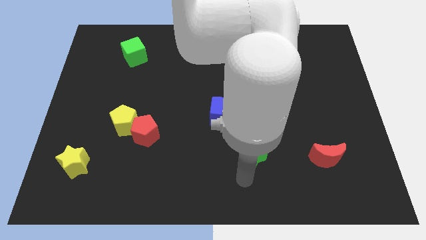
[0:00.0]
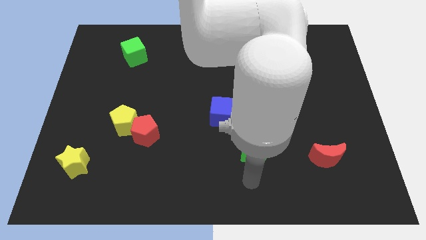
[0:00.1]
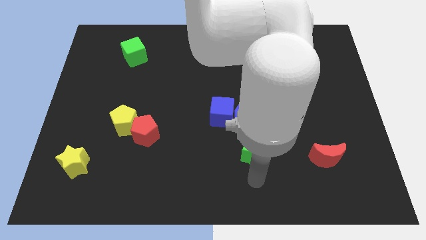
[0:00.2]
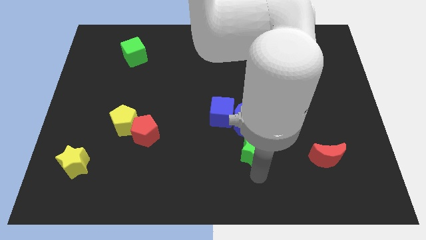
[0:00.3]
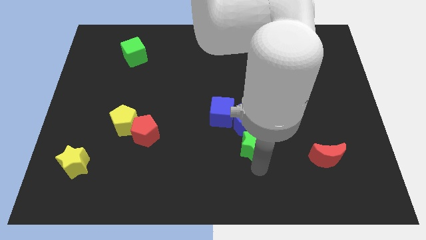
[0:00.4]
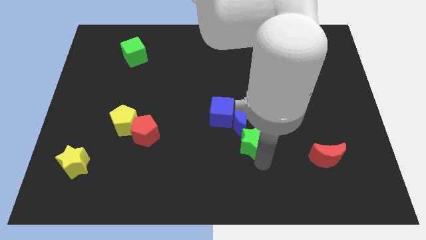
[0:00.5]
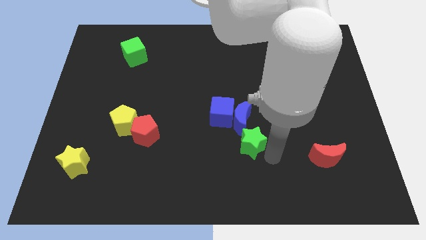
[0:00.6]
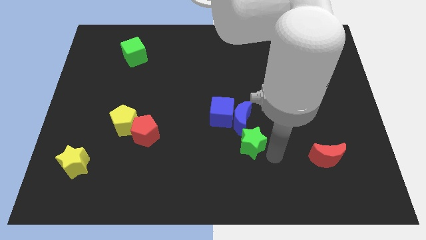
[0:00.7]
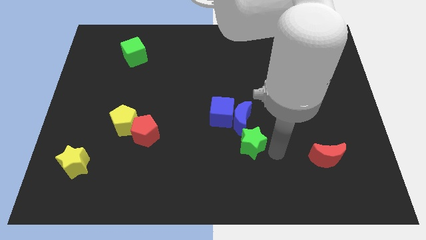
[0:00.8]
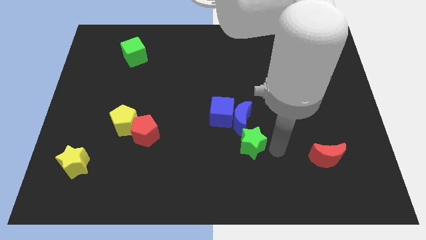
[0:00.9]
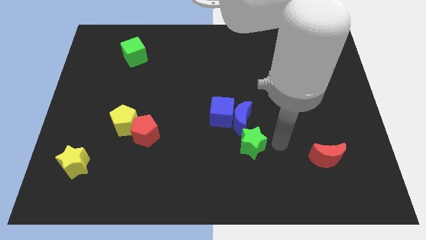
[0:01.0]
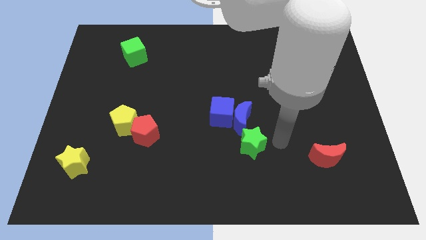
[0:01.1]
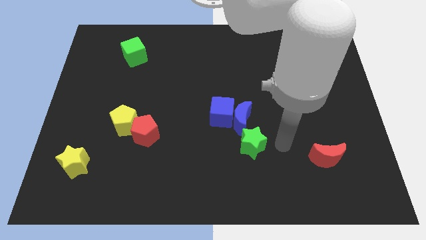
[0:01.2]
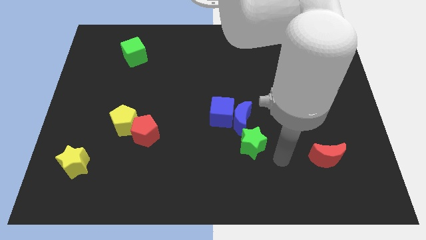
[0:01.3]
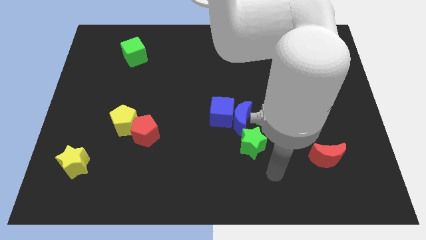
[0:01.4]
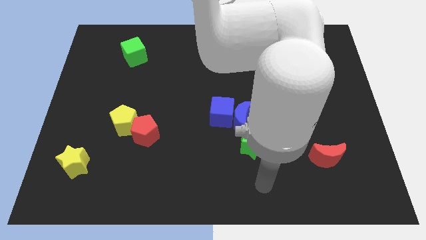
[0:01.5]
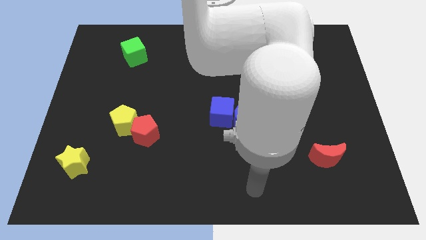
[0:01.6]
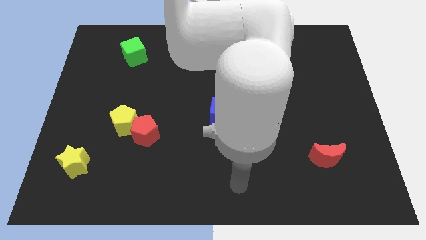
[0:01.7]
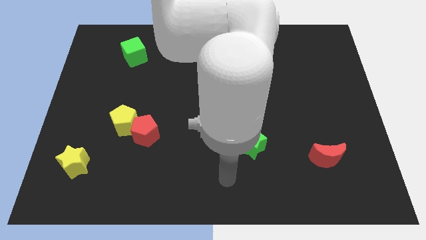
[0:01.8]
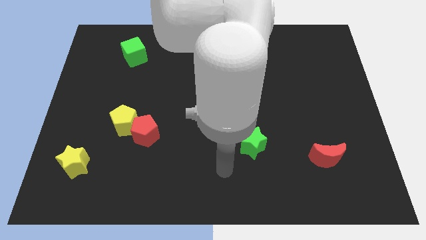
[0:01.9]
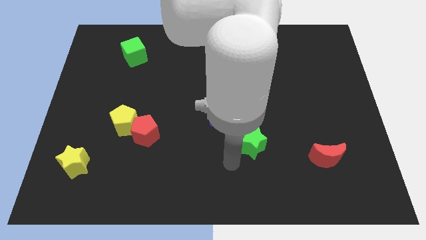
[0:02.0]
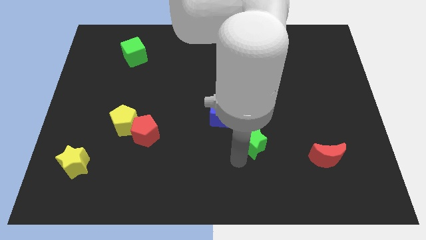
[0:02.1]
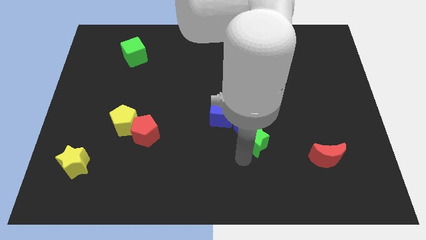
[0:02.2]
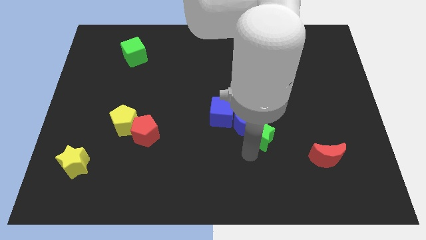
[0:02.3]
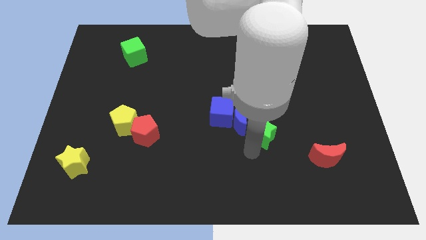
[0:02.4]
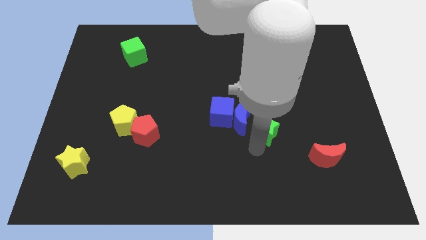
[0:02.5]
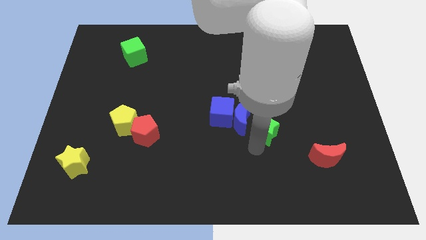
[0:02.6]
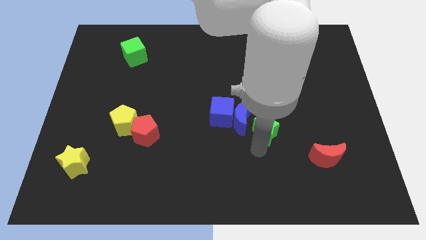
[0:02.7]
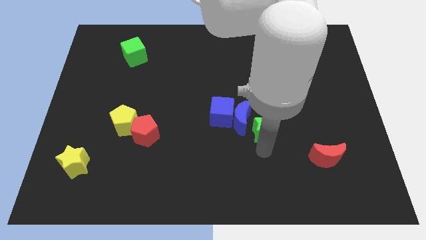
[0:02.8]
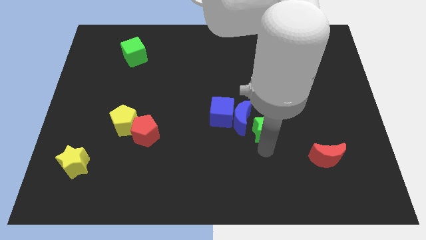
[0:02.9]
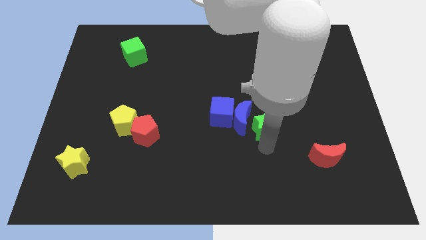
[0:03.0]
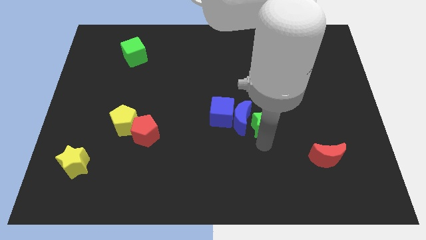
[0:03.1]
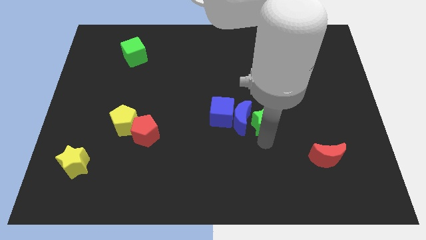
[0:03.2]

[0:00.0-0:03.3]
push the green star close to the blue moon

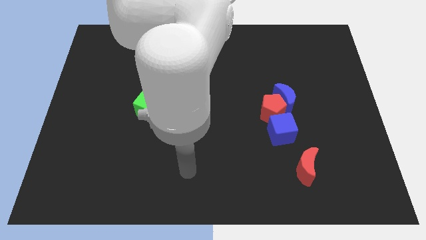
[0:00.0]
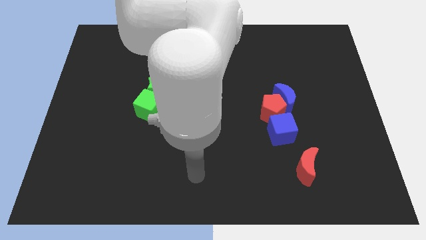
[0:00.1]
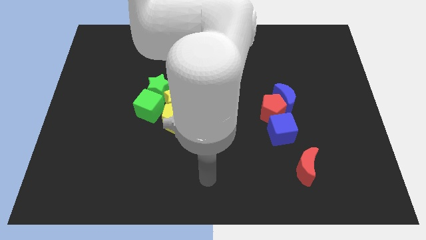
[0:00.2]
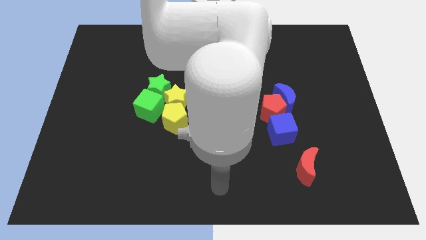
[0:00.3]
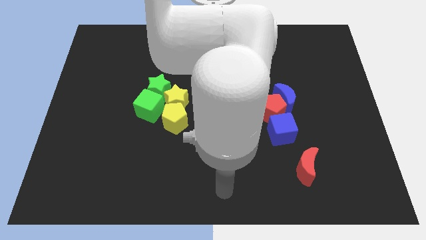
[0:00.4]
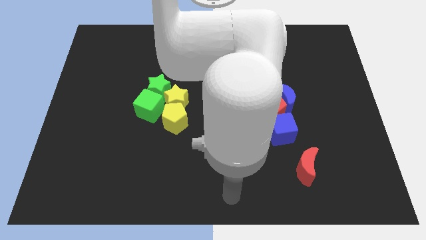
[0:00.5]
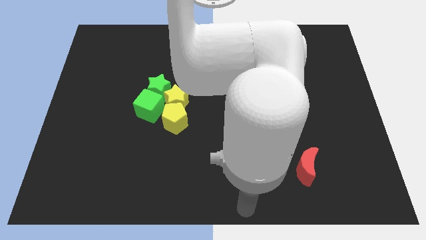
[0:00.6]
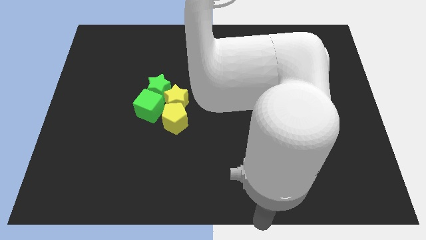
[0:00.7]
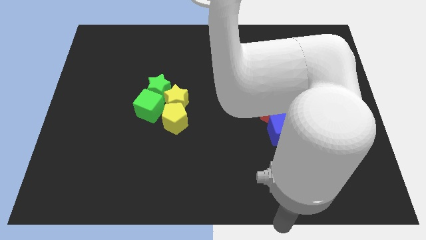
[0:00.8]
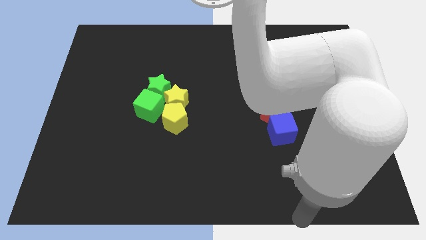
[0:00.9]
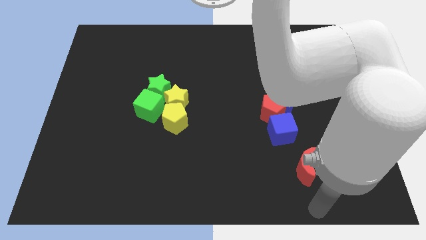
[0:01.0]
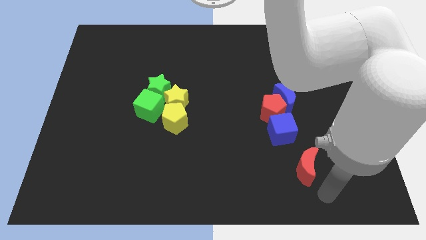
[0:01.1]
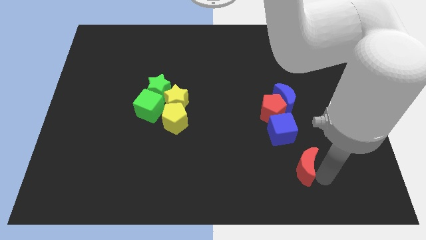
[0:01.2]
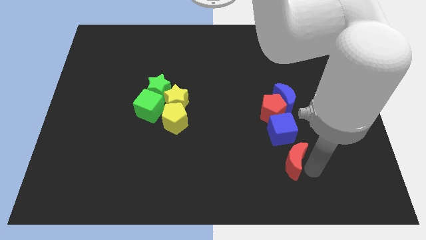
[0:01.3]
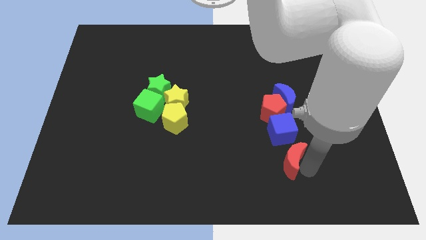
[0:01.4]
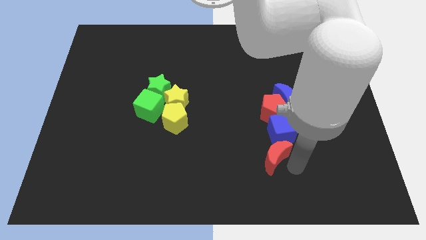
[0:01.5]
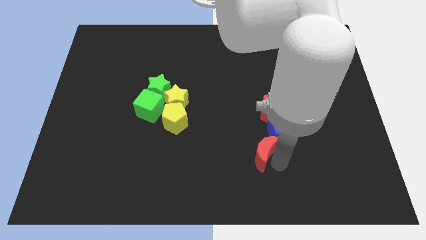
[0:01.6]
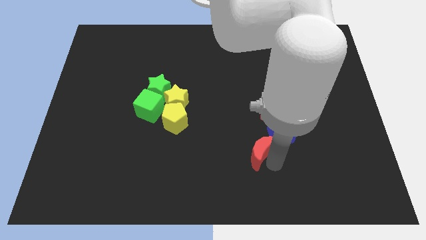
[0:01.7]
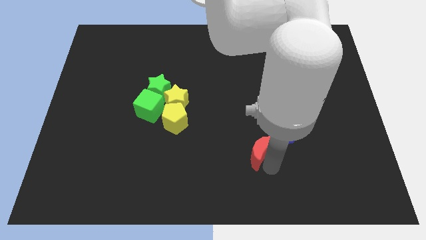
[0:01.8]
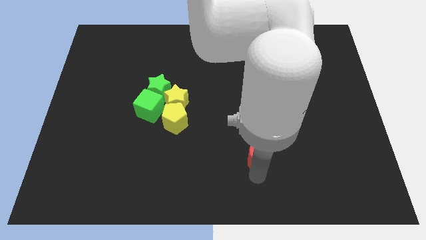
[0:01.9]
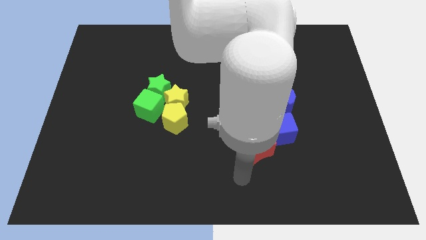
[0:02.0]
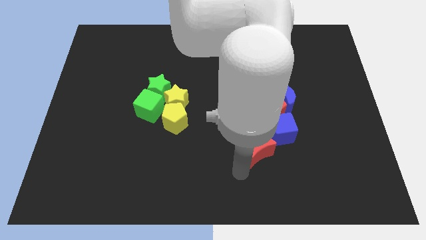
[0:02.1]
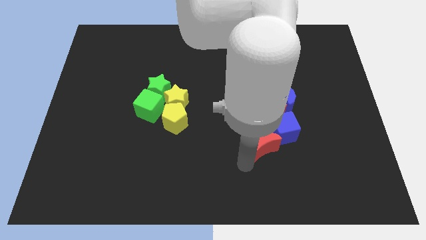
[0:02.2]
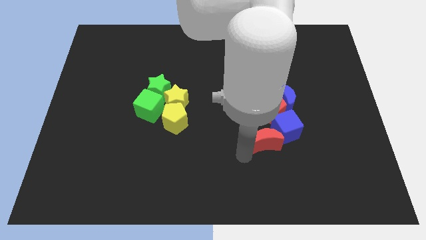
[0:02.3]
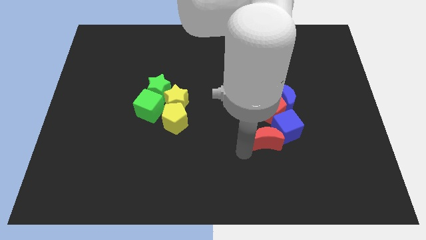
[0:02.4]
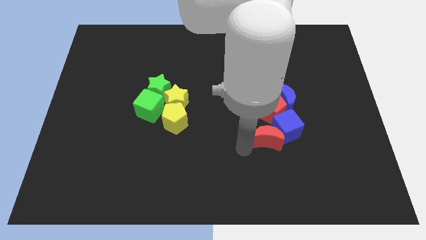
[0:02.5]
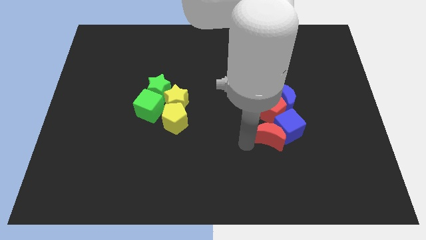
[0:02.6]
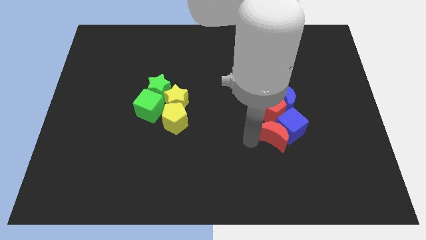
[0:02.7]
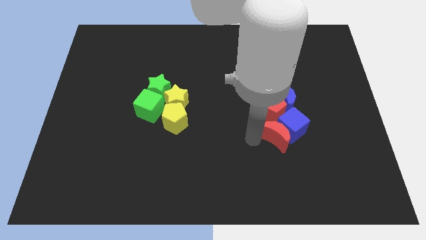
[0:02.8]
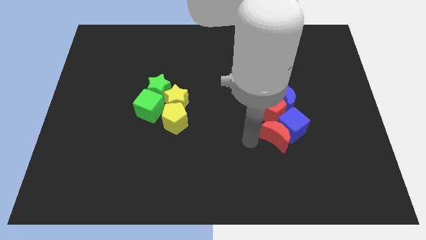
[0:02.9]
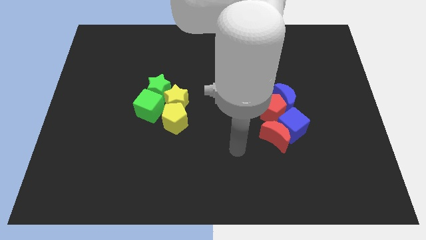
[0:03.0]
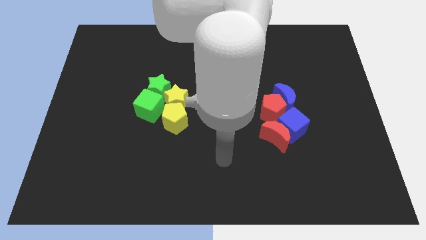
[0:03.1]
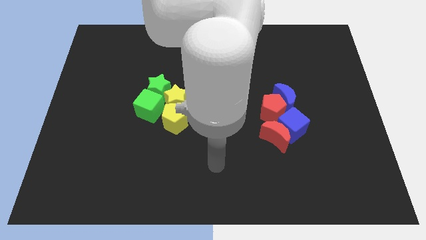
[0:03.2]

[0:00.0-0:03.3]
move the red moon into the blue cube

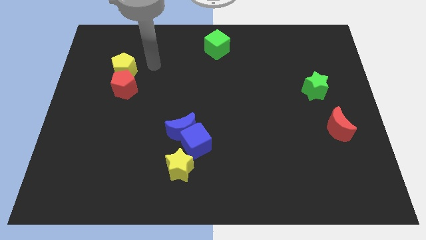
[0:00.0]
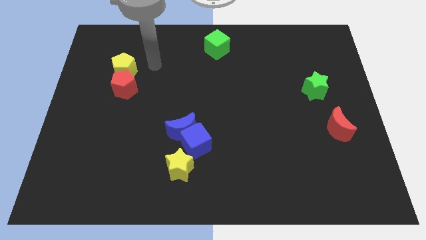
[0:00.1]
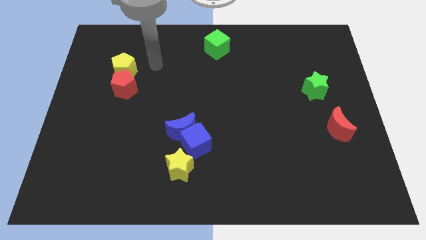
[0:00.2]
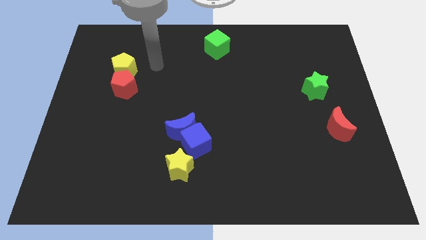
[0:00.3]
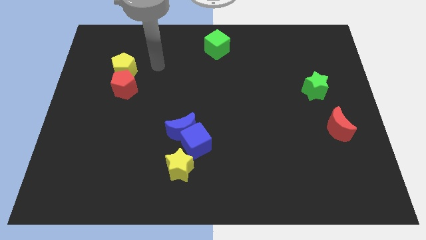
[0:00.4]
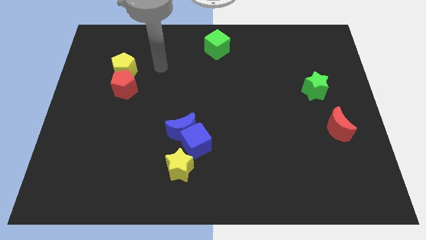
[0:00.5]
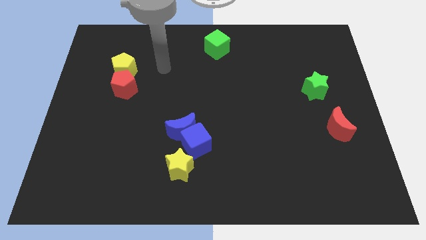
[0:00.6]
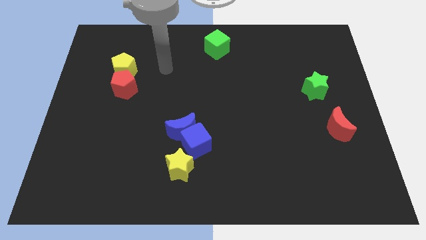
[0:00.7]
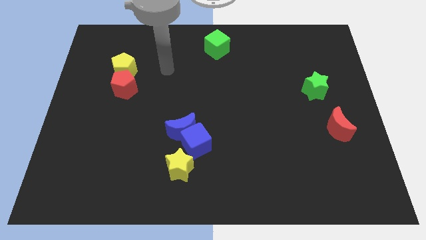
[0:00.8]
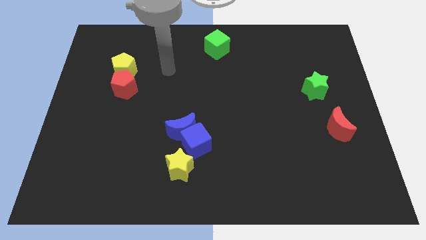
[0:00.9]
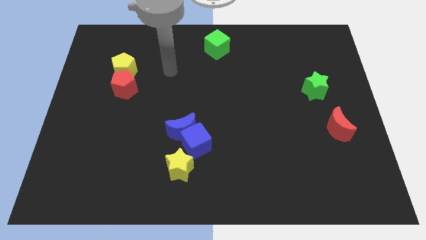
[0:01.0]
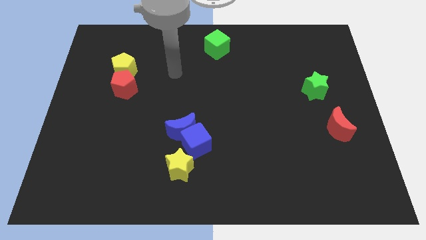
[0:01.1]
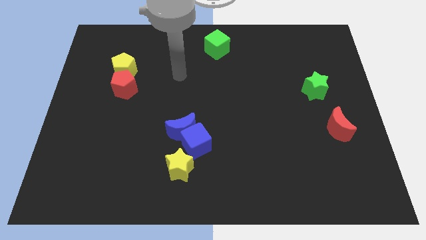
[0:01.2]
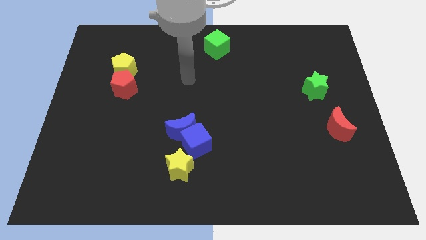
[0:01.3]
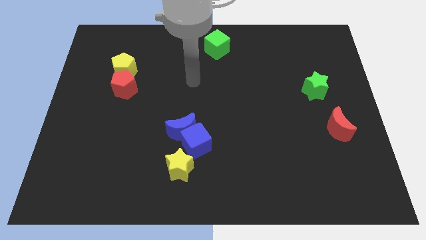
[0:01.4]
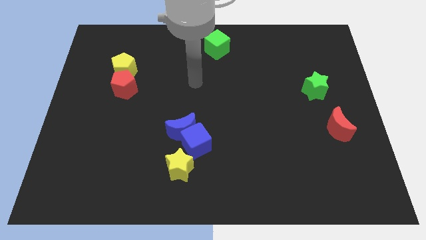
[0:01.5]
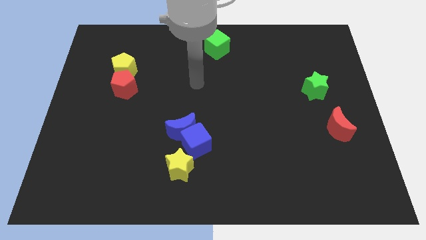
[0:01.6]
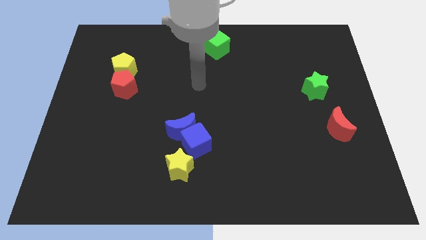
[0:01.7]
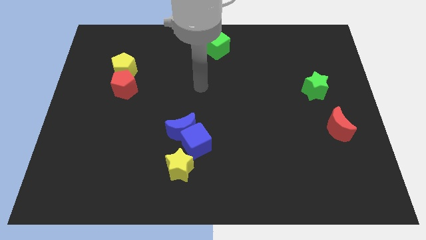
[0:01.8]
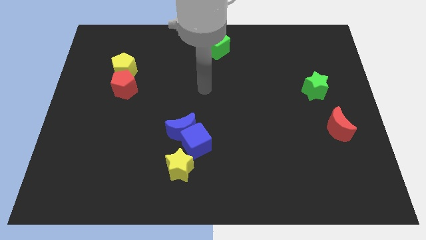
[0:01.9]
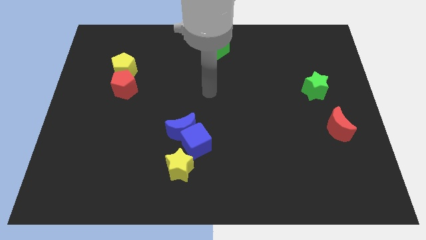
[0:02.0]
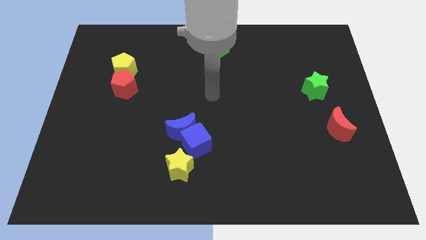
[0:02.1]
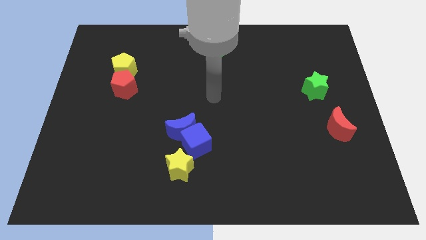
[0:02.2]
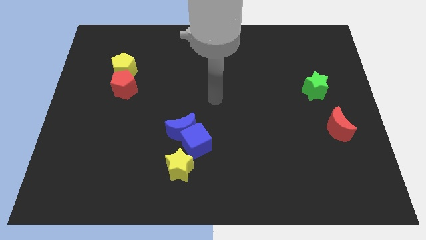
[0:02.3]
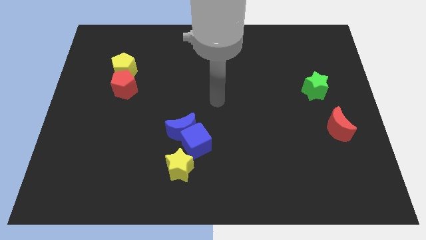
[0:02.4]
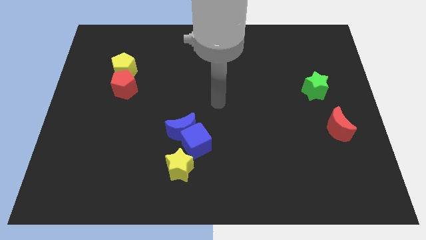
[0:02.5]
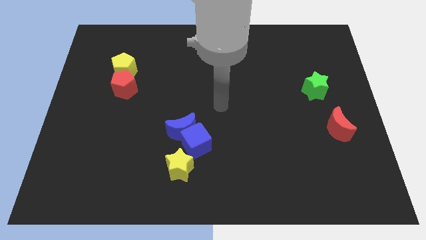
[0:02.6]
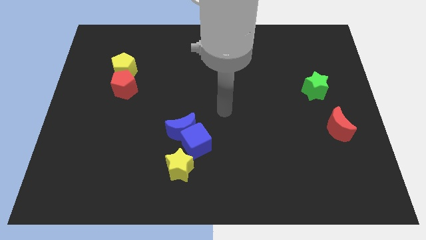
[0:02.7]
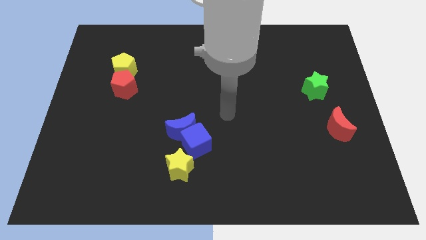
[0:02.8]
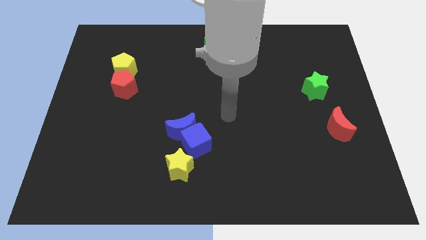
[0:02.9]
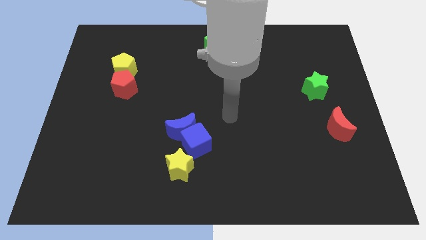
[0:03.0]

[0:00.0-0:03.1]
move your hand away from yellow pentagon
